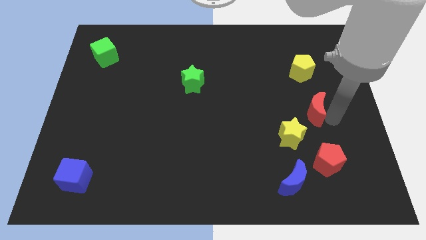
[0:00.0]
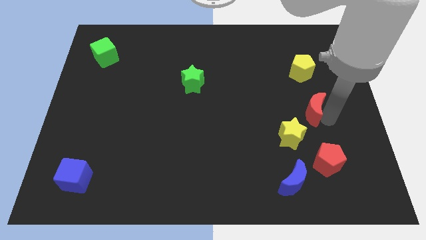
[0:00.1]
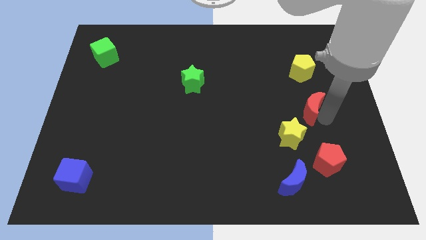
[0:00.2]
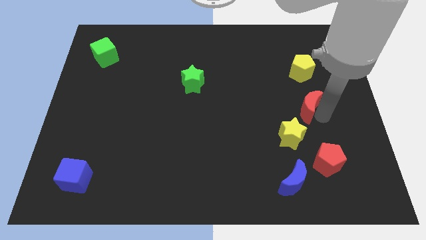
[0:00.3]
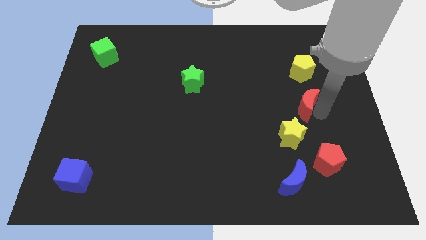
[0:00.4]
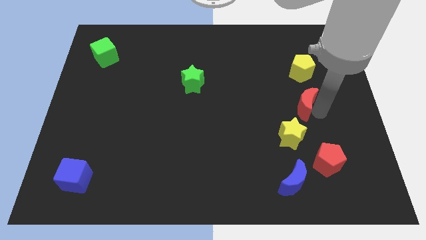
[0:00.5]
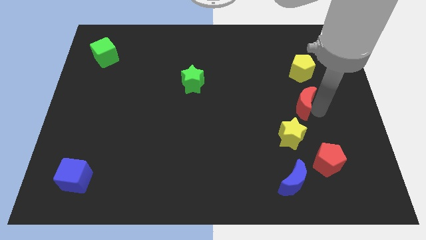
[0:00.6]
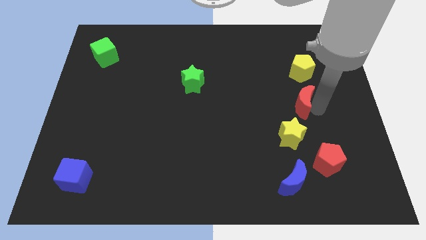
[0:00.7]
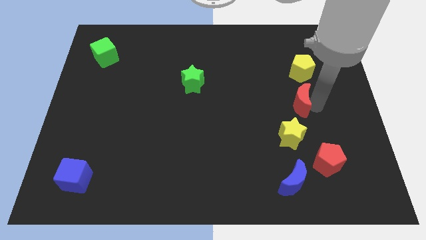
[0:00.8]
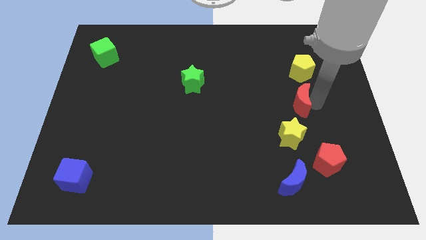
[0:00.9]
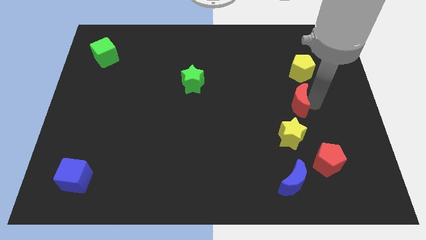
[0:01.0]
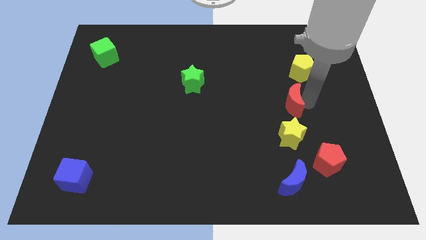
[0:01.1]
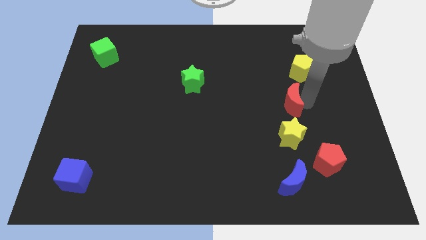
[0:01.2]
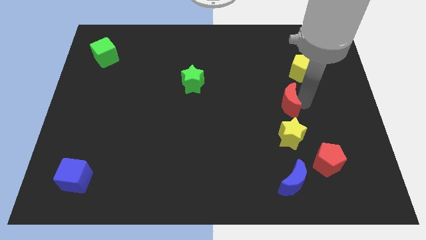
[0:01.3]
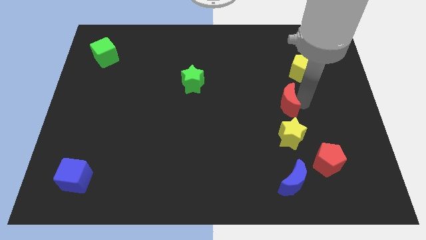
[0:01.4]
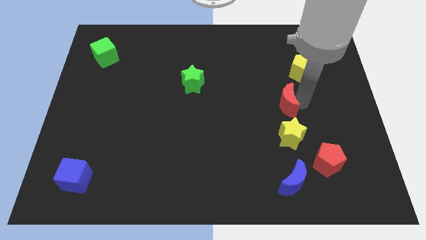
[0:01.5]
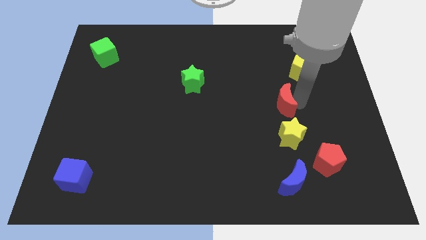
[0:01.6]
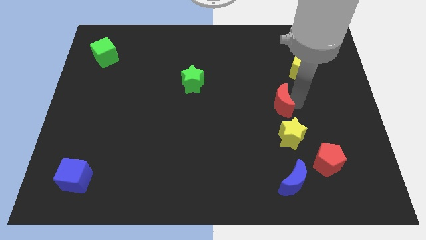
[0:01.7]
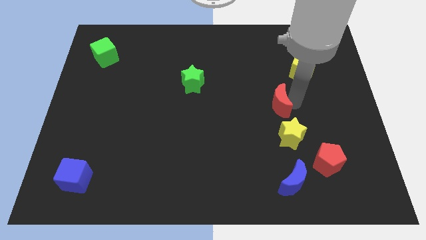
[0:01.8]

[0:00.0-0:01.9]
place the red moon above the yellow star

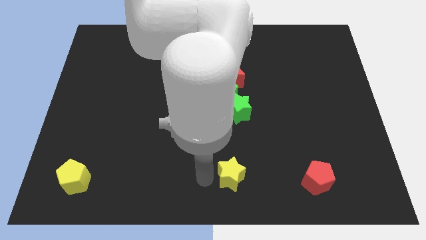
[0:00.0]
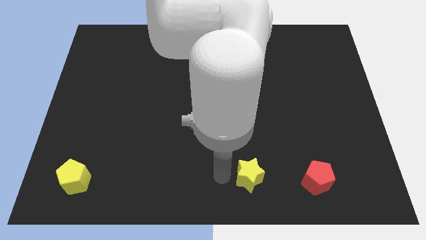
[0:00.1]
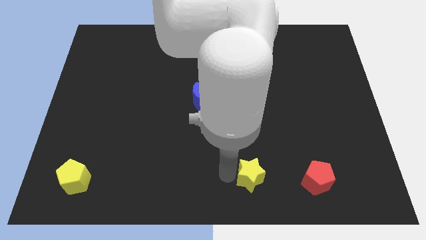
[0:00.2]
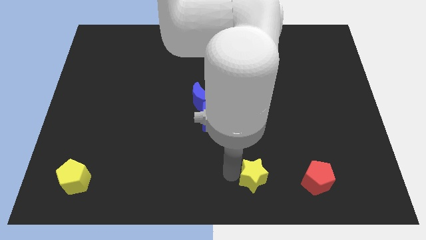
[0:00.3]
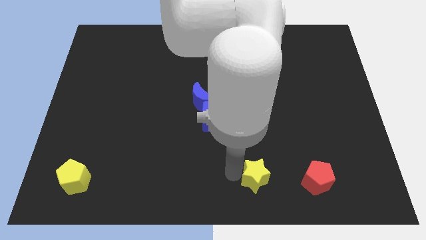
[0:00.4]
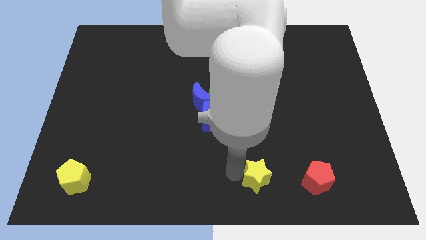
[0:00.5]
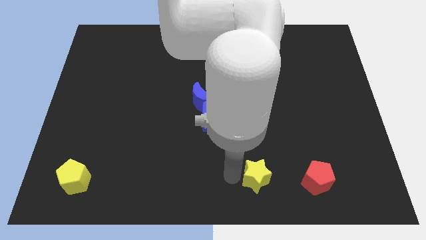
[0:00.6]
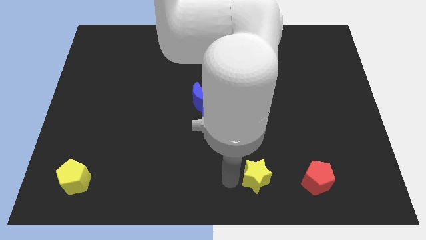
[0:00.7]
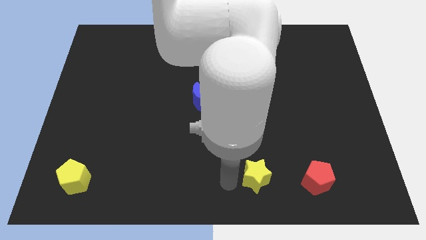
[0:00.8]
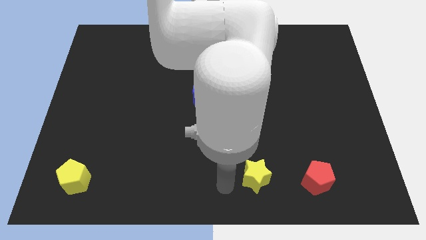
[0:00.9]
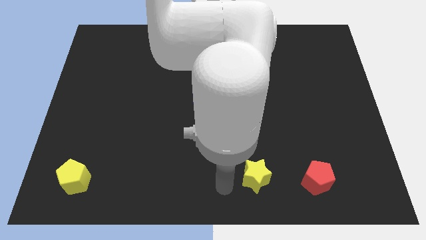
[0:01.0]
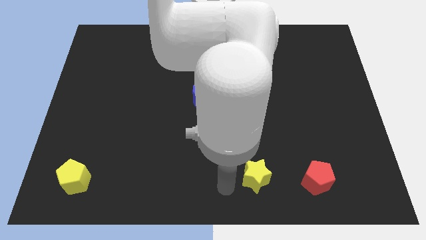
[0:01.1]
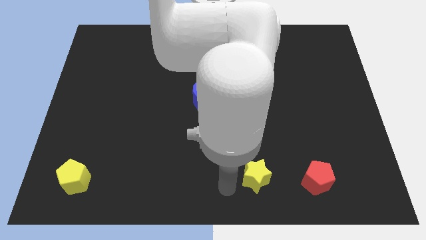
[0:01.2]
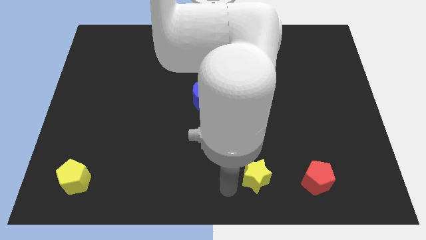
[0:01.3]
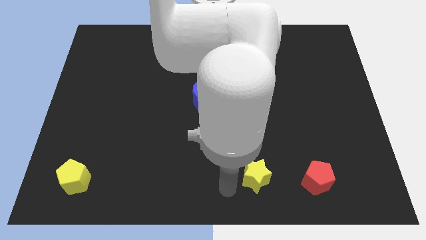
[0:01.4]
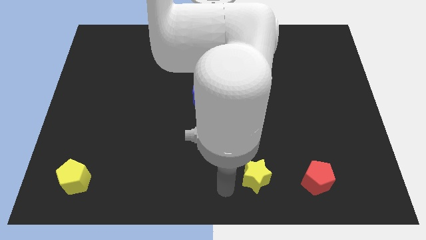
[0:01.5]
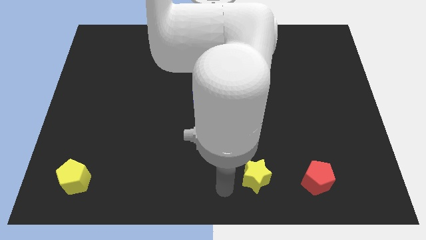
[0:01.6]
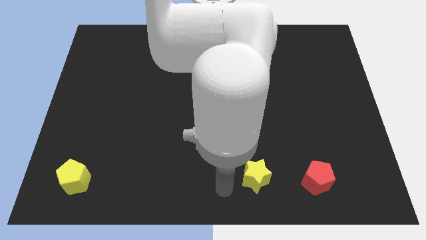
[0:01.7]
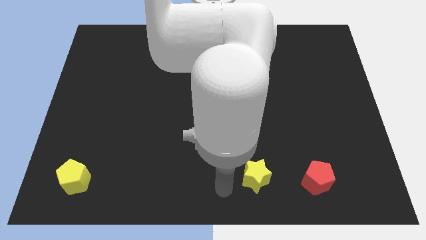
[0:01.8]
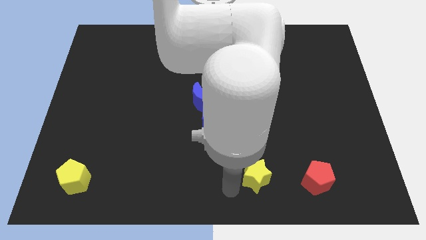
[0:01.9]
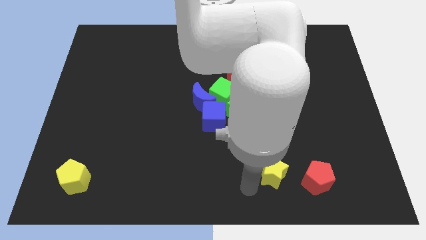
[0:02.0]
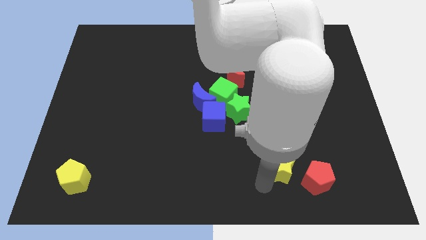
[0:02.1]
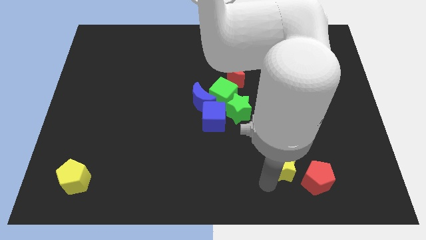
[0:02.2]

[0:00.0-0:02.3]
move yellow star left side of the red pentagon

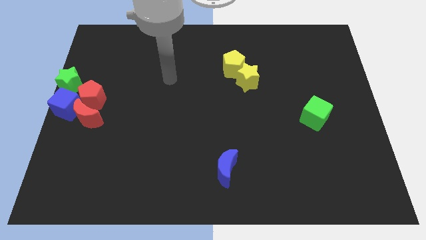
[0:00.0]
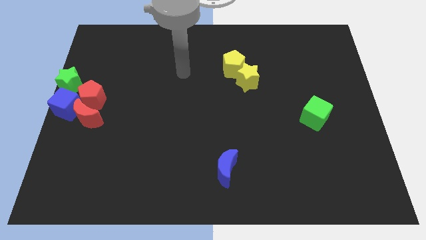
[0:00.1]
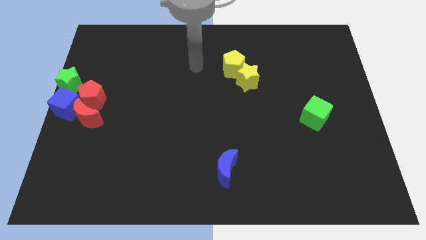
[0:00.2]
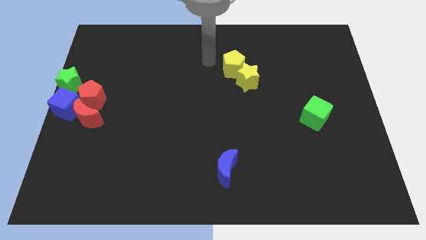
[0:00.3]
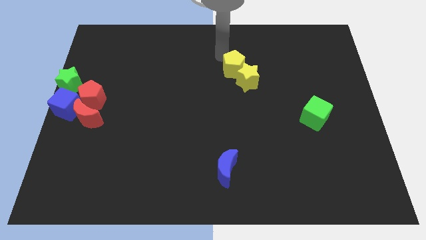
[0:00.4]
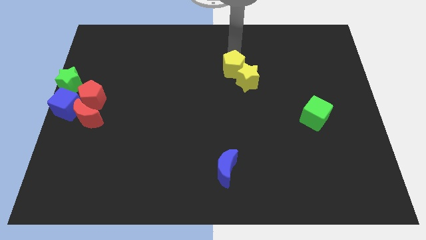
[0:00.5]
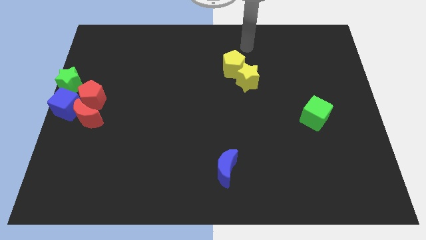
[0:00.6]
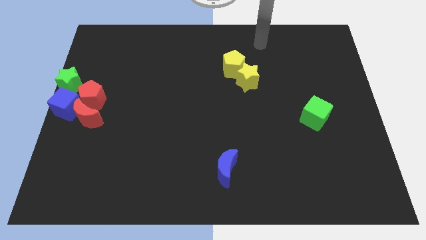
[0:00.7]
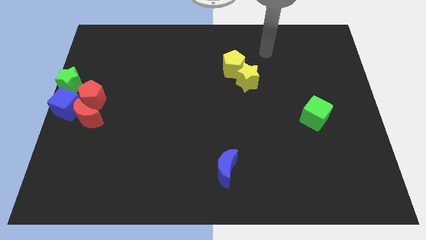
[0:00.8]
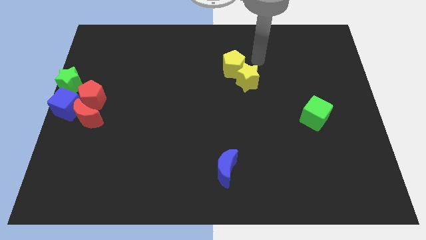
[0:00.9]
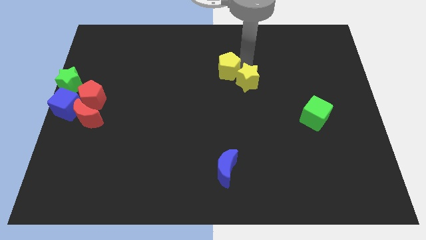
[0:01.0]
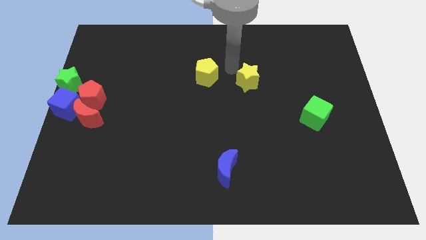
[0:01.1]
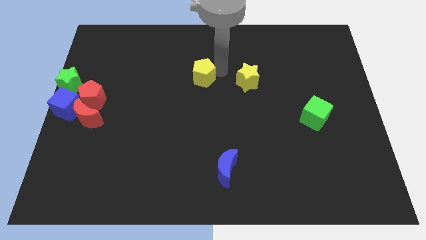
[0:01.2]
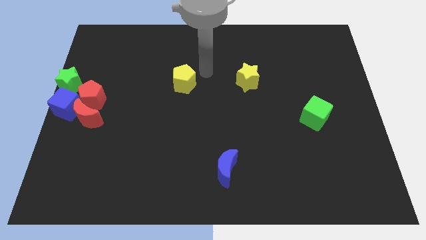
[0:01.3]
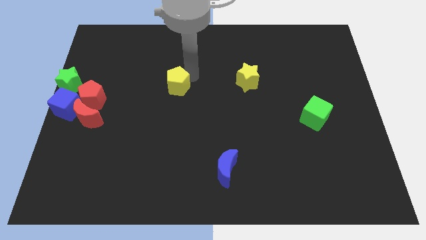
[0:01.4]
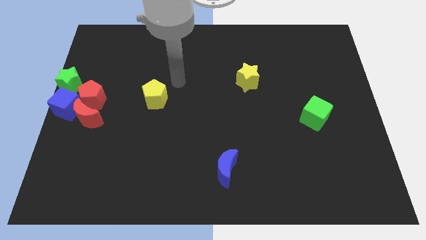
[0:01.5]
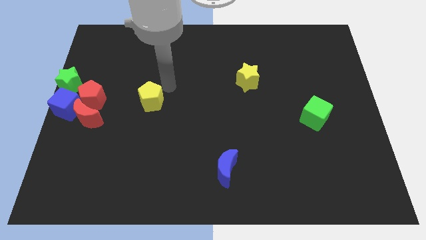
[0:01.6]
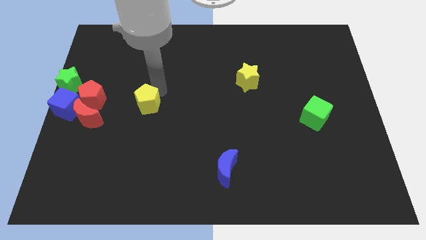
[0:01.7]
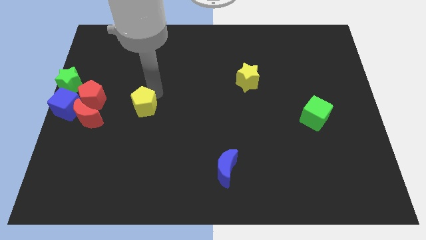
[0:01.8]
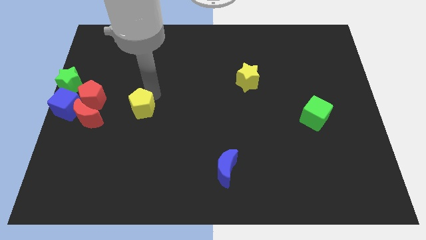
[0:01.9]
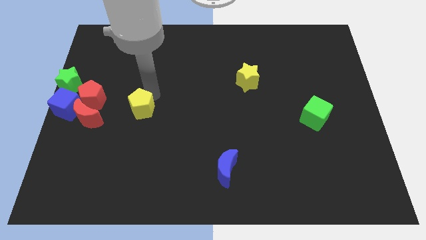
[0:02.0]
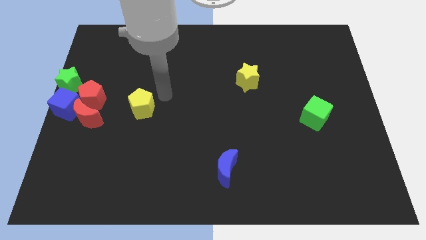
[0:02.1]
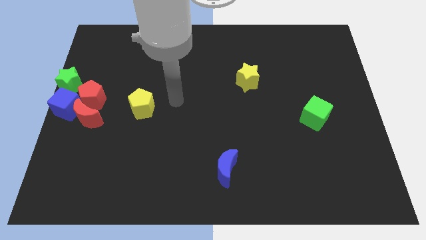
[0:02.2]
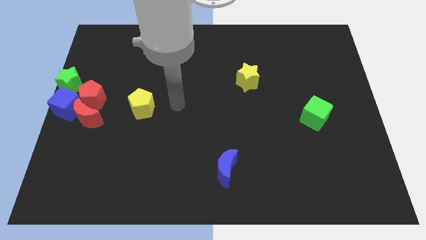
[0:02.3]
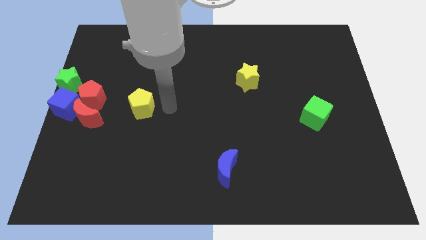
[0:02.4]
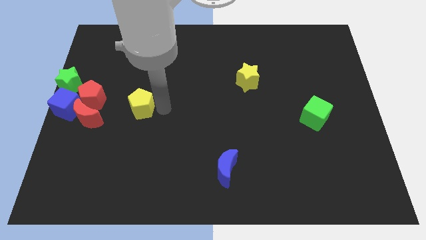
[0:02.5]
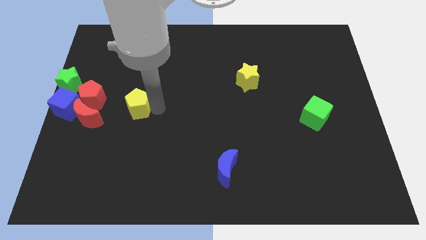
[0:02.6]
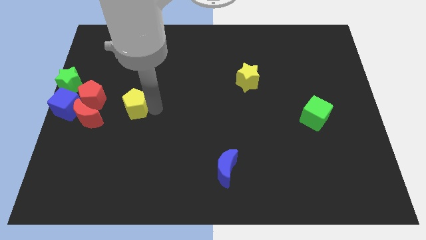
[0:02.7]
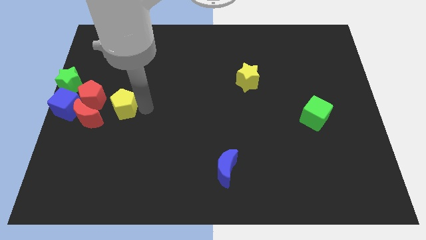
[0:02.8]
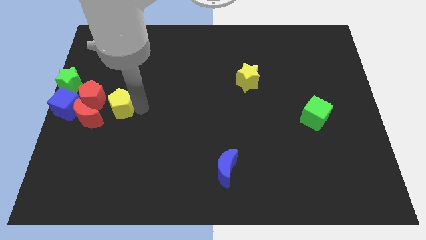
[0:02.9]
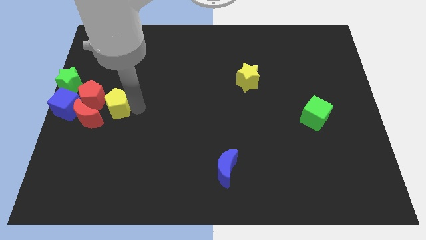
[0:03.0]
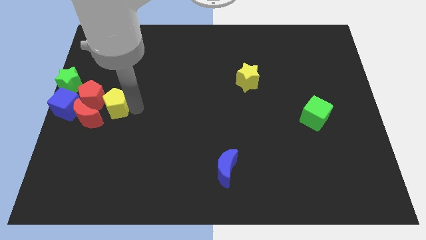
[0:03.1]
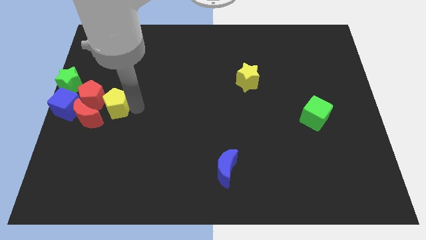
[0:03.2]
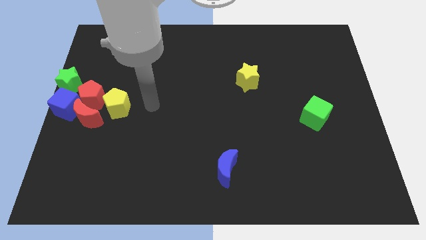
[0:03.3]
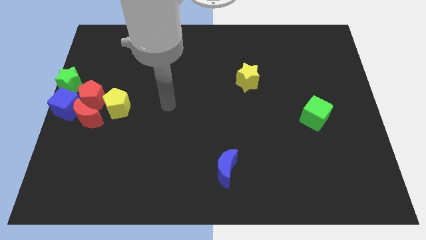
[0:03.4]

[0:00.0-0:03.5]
push the yellow pentagon into red pentagon and red moon

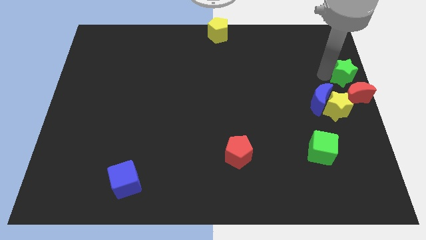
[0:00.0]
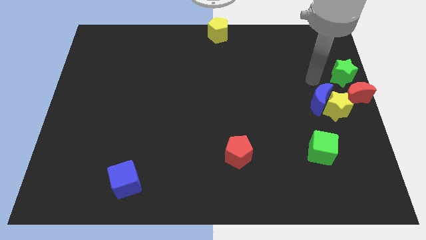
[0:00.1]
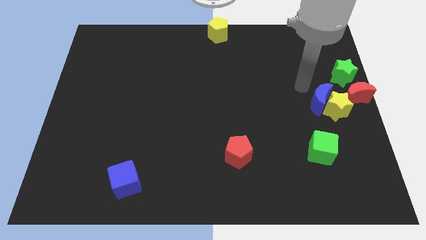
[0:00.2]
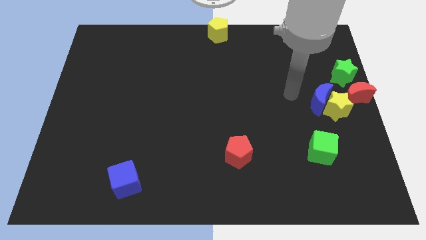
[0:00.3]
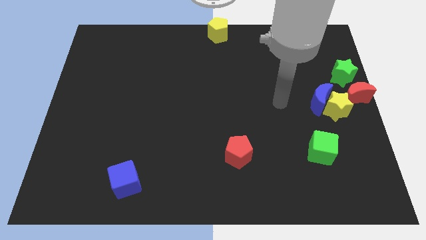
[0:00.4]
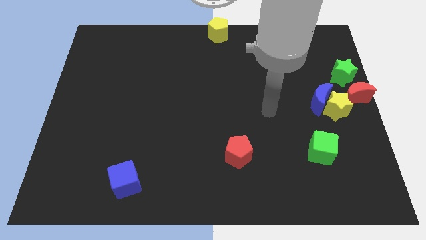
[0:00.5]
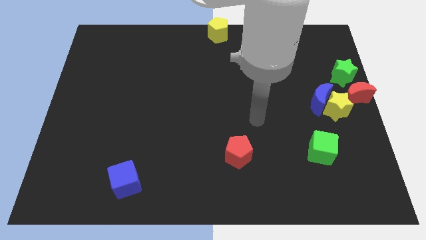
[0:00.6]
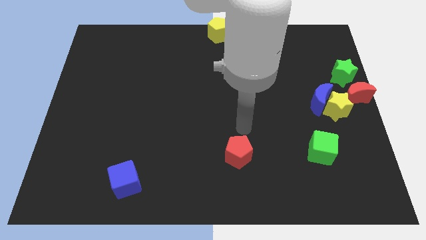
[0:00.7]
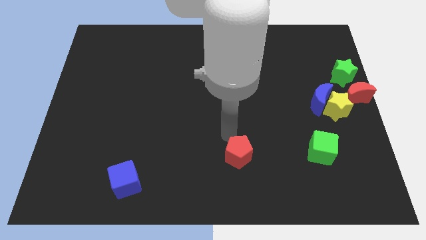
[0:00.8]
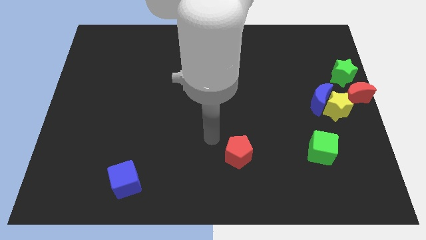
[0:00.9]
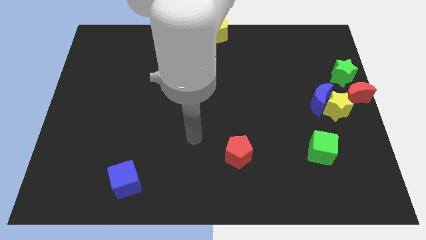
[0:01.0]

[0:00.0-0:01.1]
move yourself away from green star
